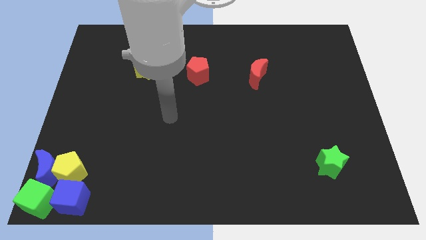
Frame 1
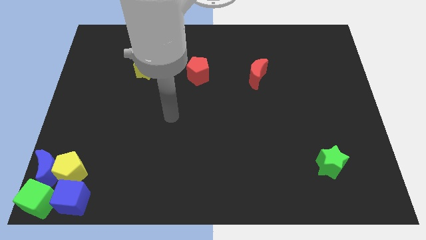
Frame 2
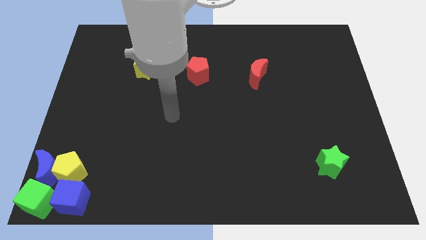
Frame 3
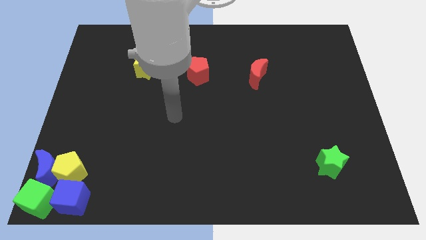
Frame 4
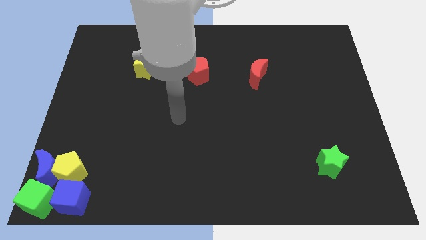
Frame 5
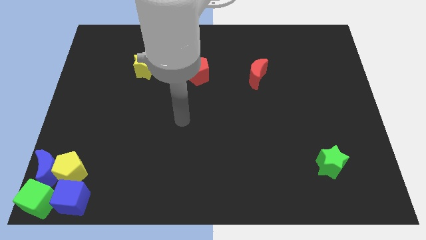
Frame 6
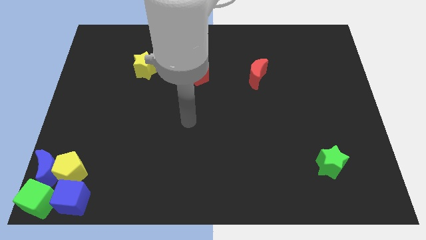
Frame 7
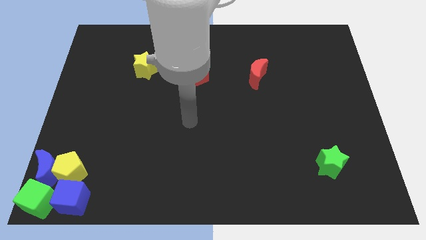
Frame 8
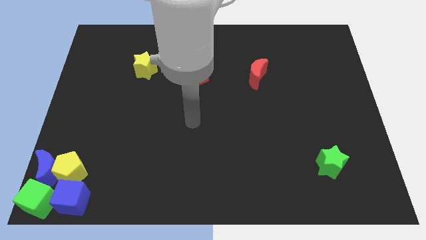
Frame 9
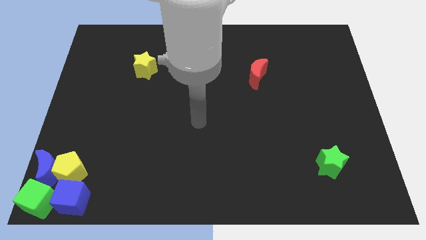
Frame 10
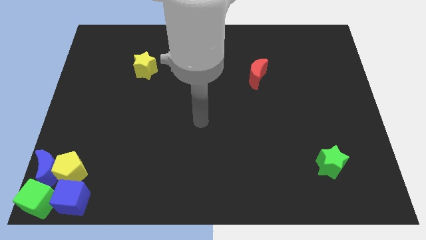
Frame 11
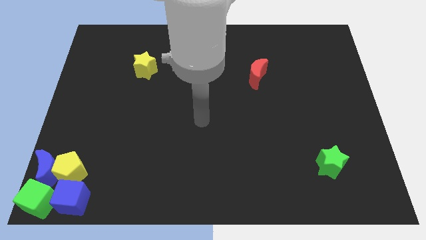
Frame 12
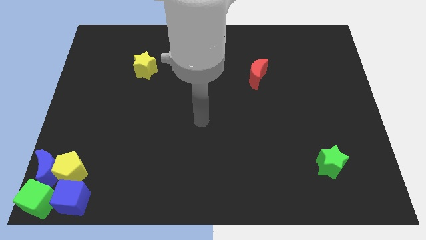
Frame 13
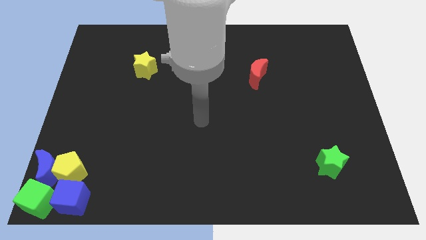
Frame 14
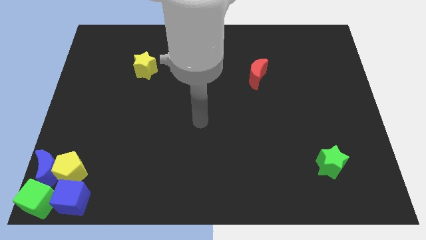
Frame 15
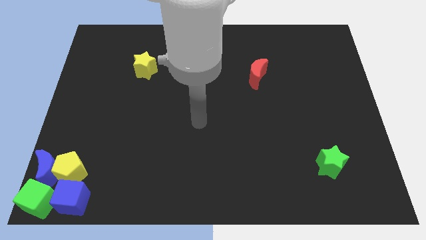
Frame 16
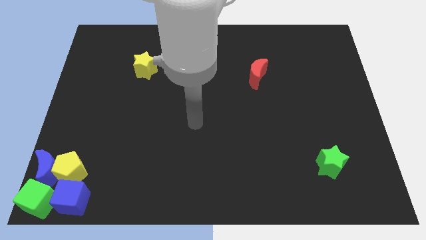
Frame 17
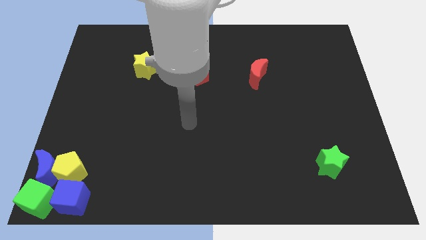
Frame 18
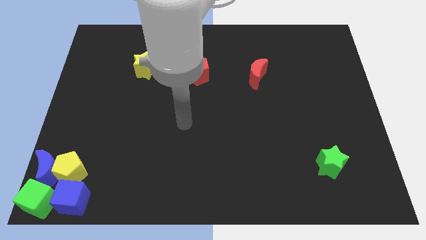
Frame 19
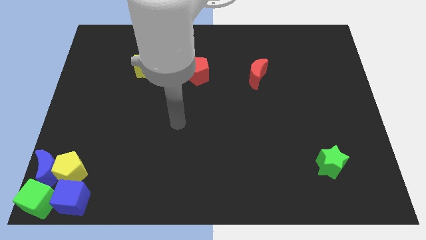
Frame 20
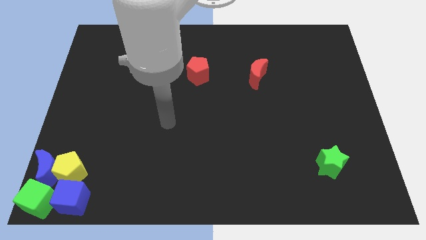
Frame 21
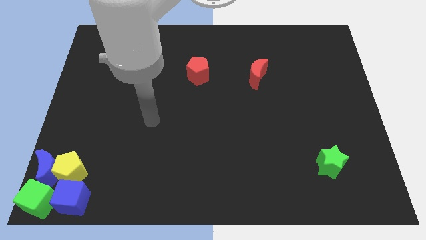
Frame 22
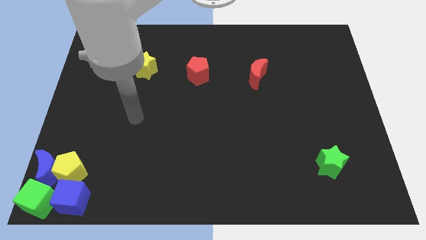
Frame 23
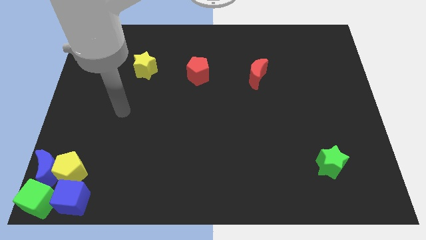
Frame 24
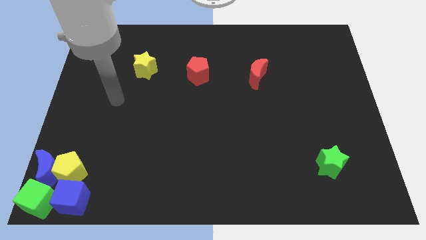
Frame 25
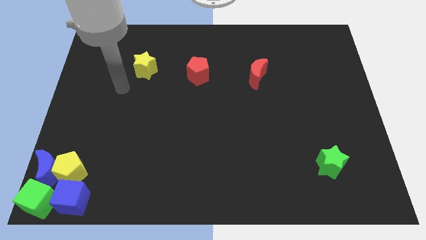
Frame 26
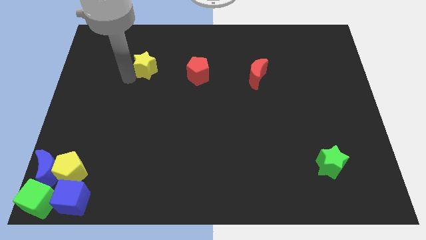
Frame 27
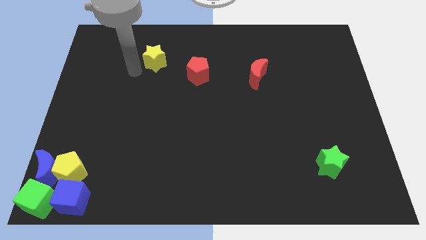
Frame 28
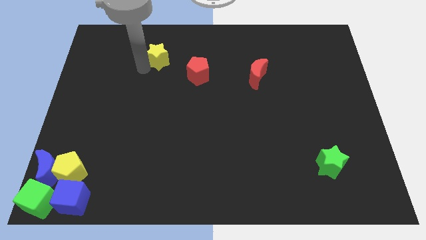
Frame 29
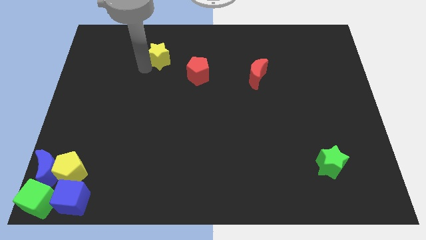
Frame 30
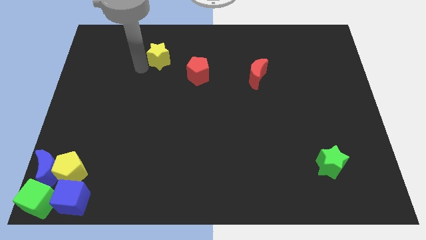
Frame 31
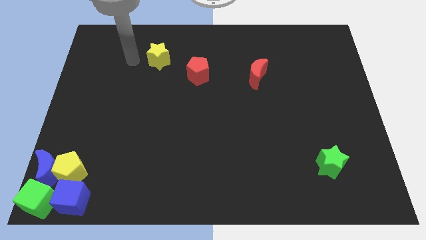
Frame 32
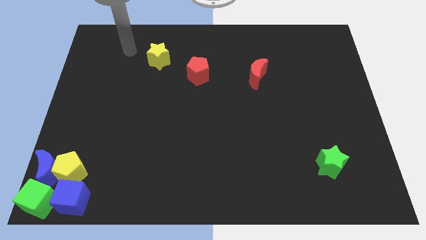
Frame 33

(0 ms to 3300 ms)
place the yellow star diagonal to the top left of the red pentagon

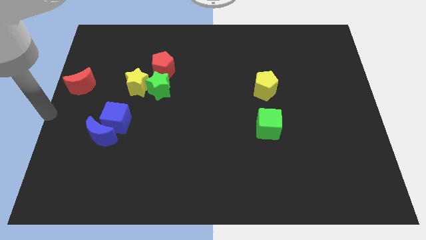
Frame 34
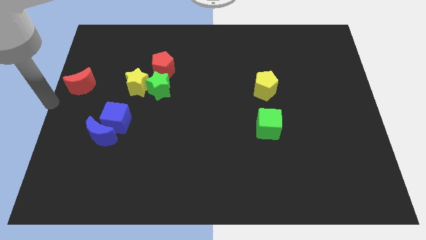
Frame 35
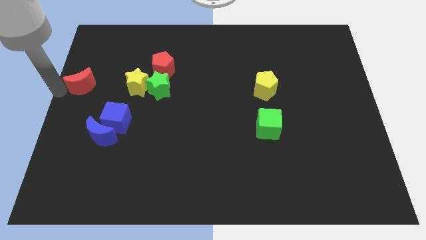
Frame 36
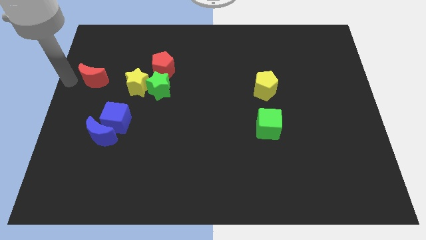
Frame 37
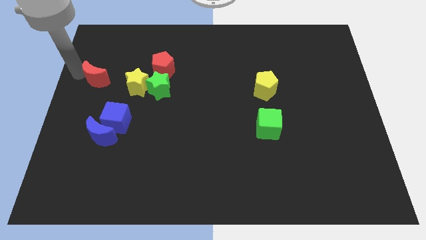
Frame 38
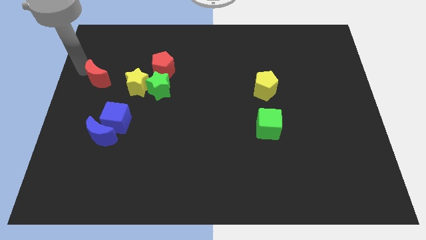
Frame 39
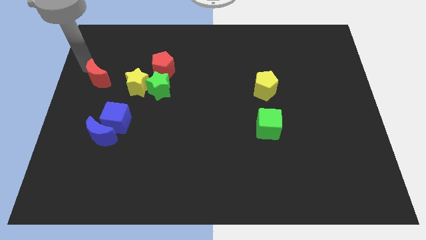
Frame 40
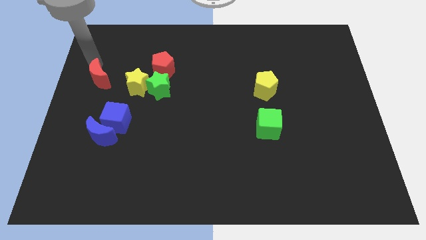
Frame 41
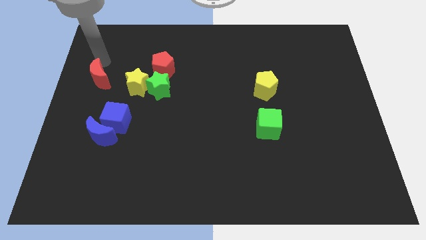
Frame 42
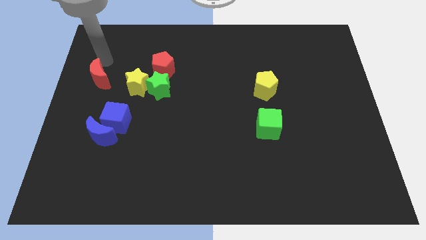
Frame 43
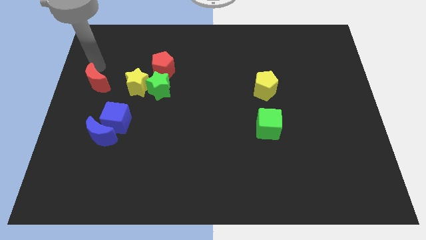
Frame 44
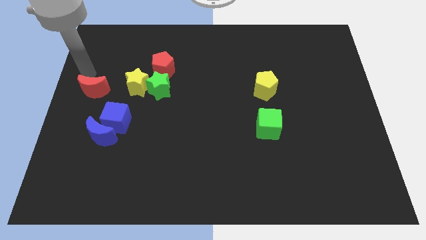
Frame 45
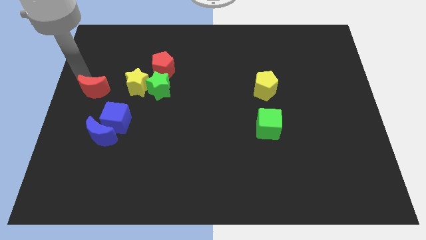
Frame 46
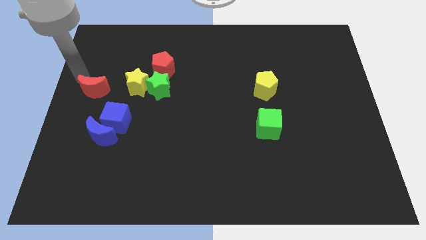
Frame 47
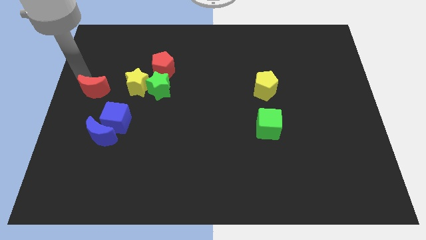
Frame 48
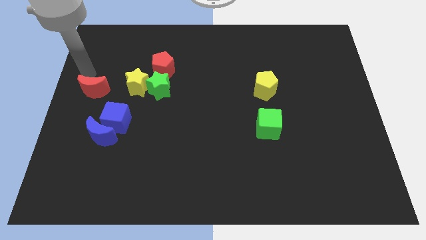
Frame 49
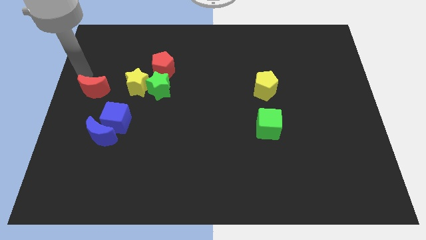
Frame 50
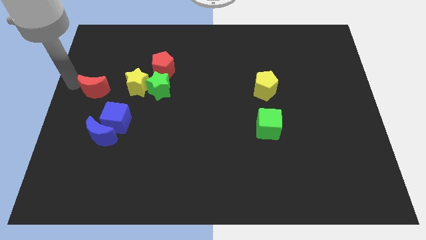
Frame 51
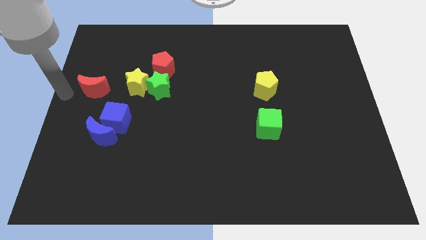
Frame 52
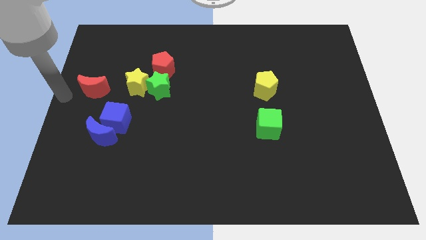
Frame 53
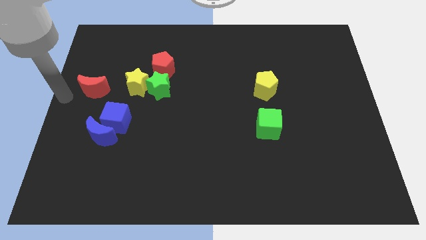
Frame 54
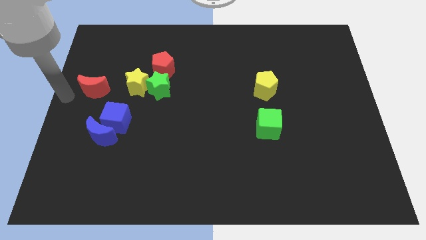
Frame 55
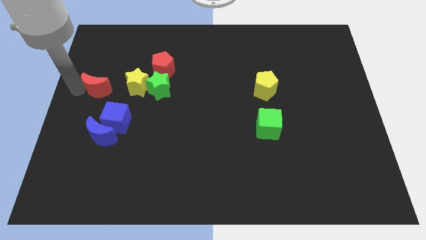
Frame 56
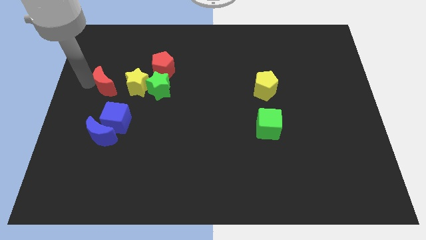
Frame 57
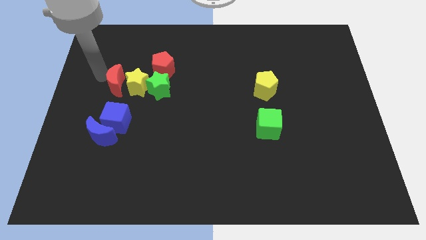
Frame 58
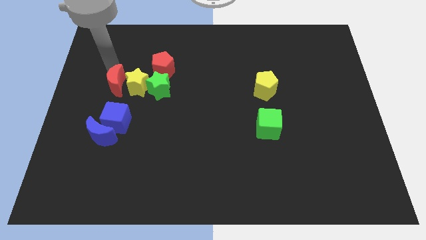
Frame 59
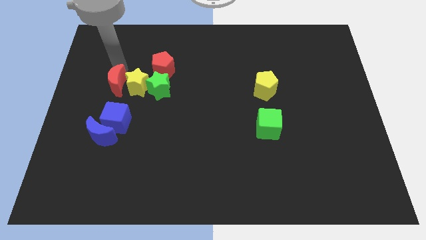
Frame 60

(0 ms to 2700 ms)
place the red moon at the top of blue cube

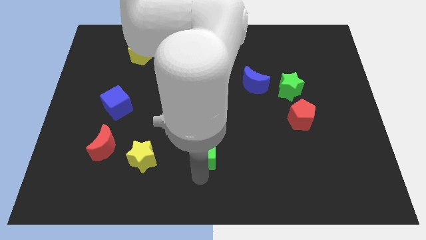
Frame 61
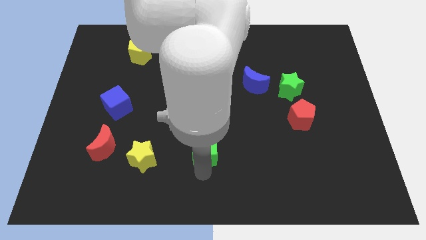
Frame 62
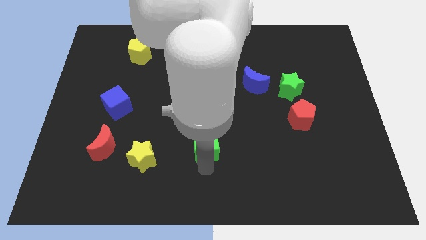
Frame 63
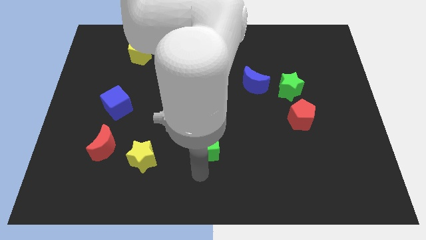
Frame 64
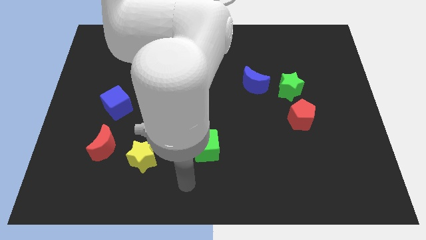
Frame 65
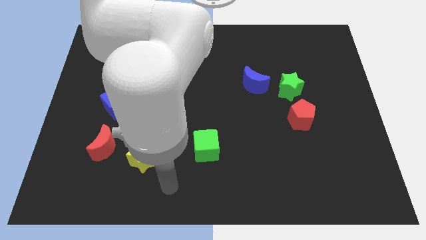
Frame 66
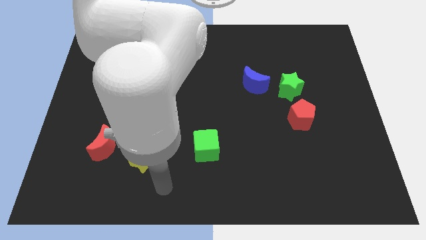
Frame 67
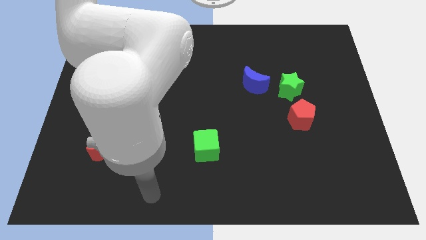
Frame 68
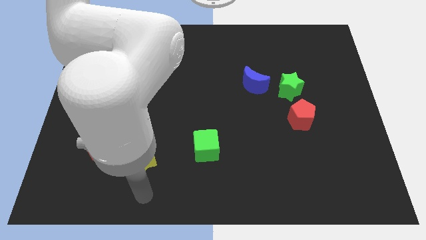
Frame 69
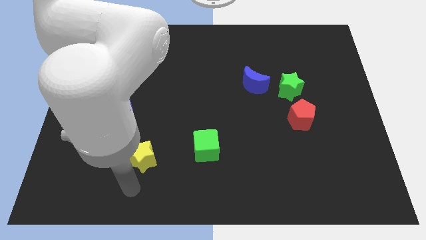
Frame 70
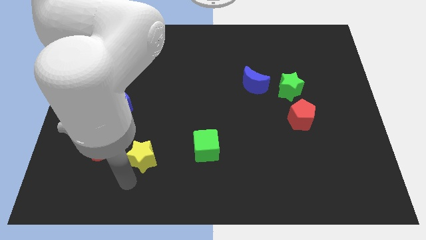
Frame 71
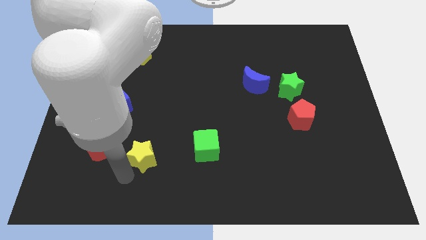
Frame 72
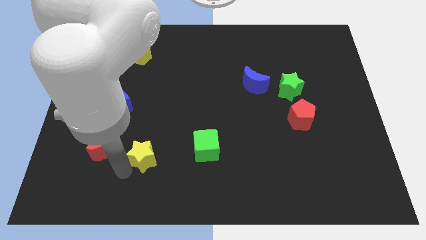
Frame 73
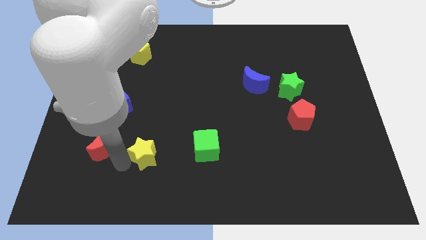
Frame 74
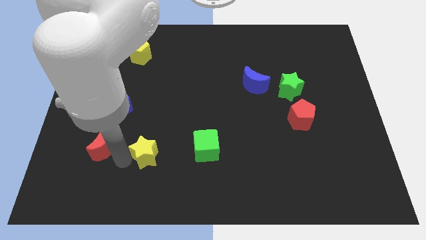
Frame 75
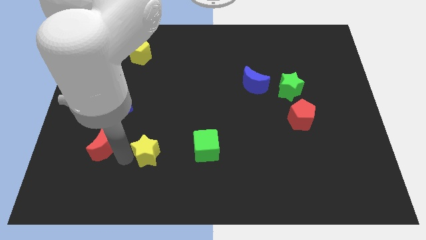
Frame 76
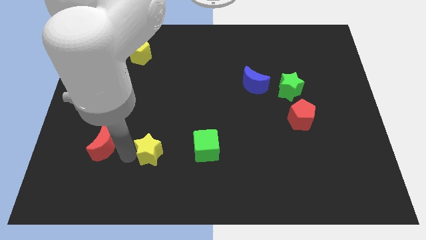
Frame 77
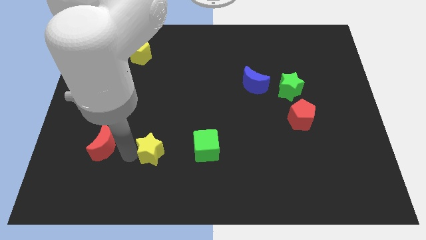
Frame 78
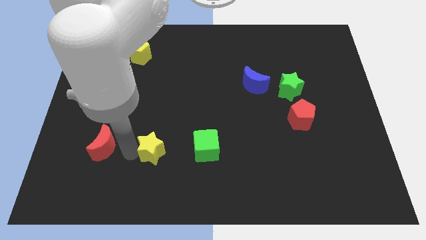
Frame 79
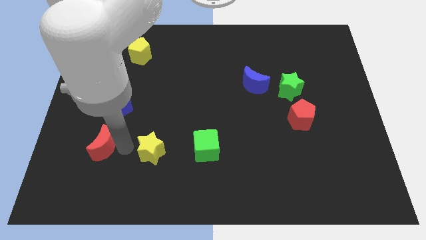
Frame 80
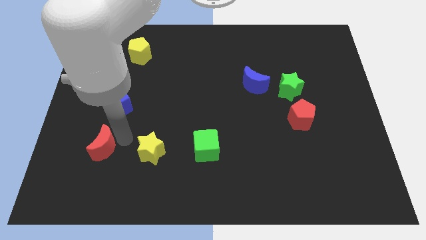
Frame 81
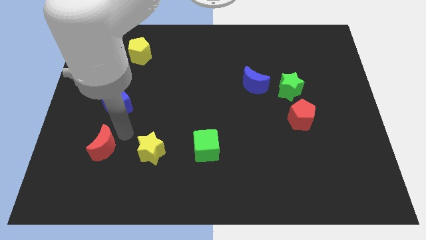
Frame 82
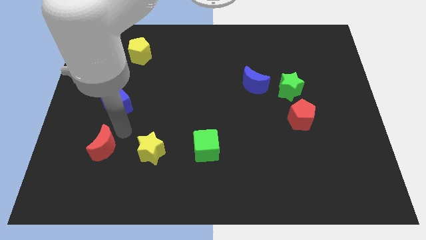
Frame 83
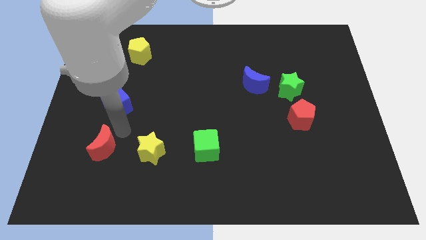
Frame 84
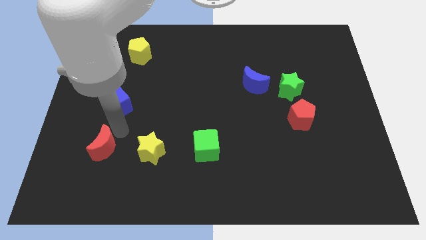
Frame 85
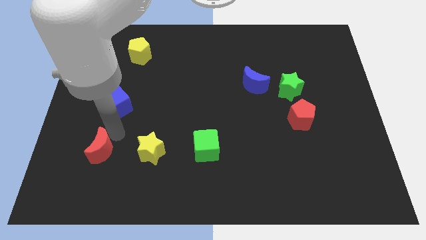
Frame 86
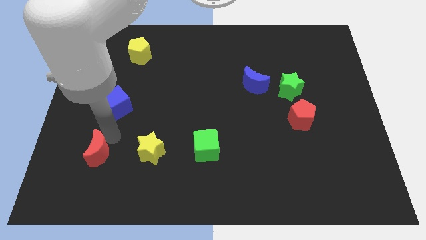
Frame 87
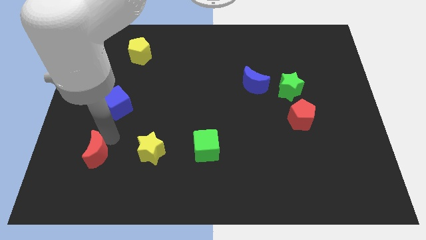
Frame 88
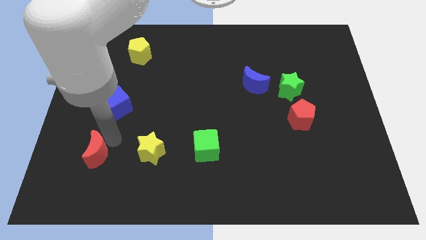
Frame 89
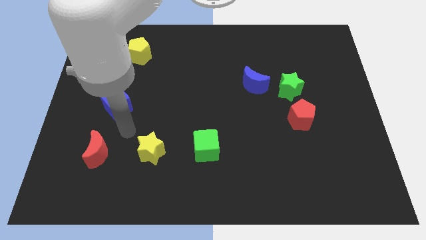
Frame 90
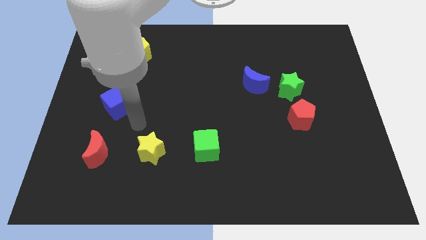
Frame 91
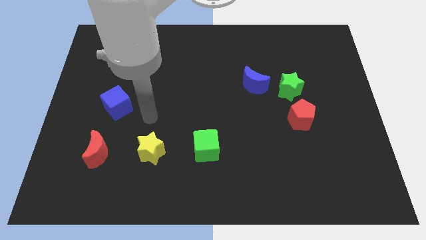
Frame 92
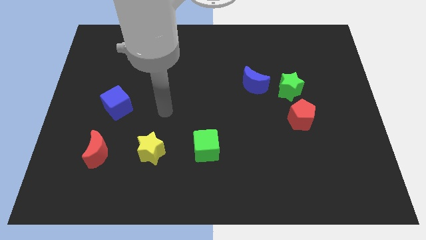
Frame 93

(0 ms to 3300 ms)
adjust red crescent yellow star and green cube to form a line
